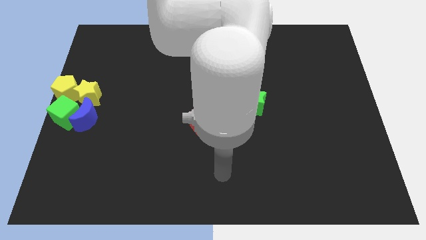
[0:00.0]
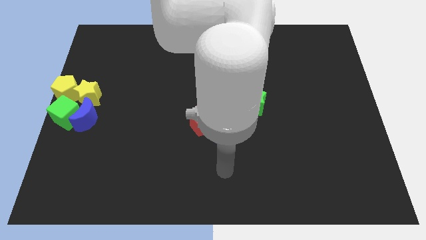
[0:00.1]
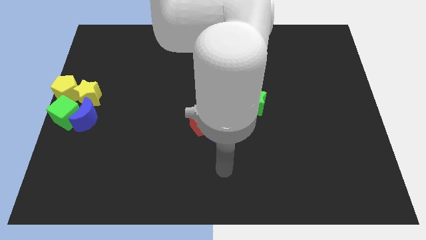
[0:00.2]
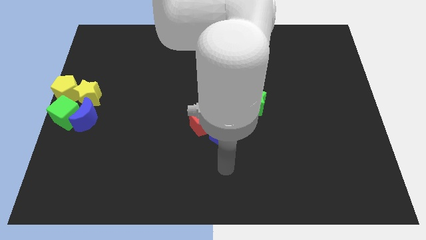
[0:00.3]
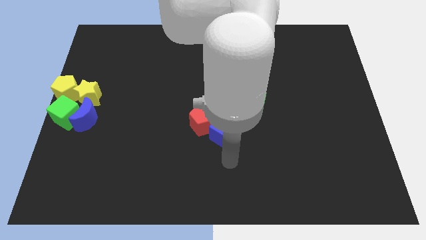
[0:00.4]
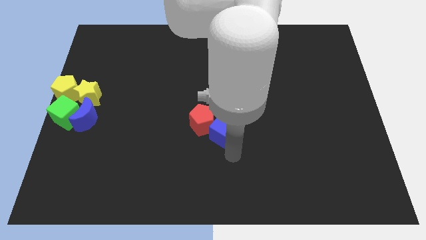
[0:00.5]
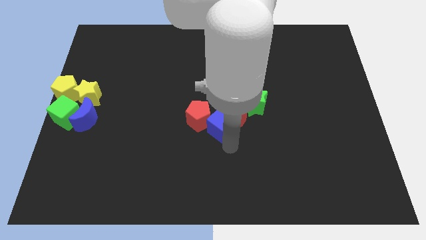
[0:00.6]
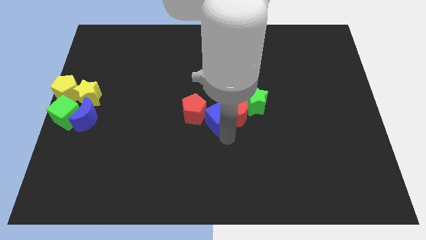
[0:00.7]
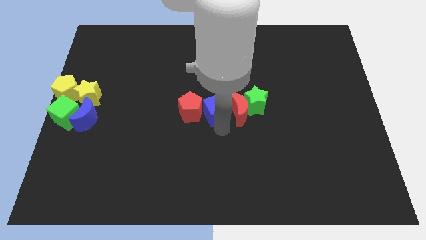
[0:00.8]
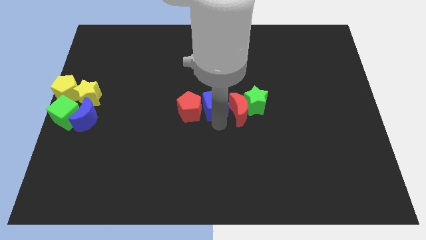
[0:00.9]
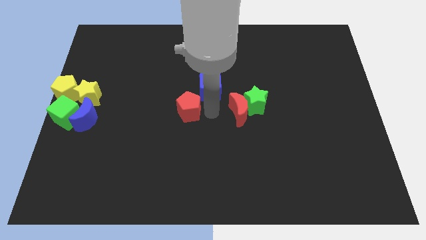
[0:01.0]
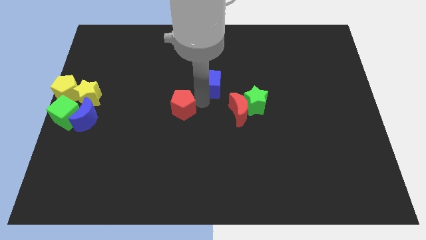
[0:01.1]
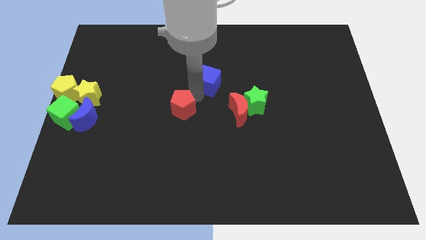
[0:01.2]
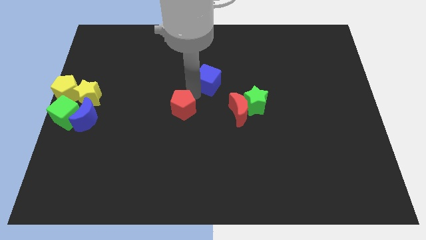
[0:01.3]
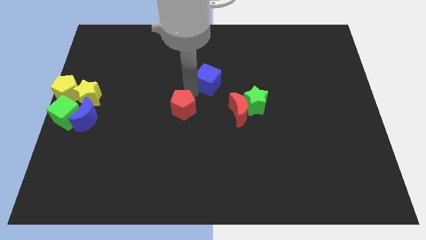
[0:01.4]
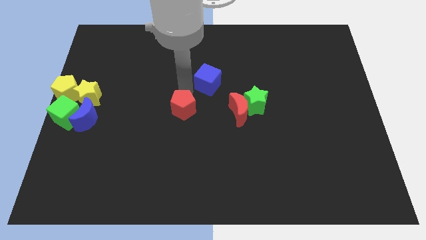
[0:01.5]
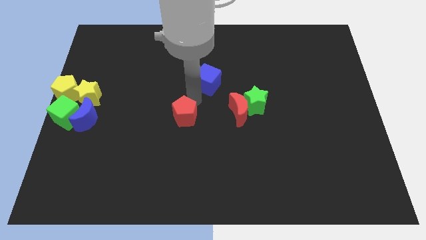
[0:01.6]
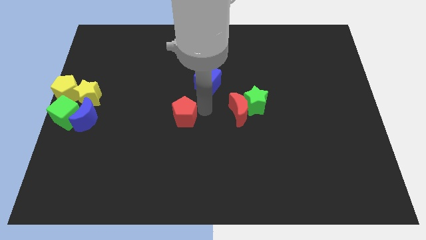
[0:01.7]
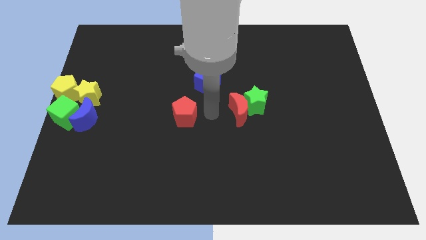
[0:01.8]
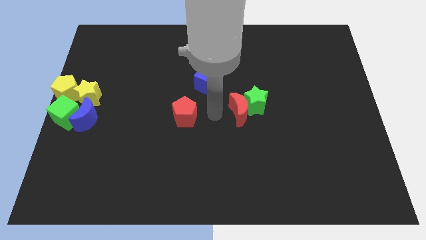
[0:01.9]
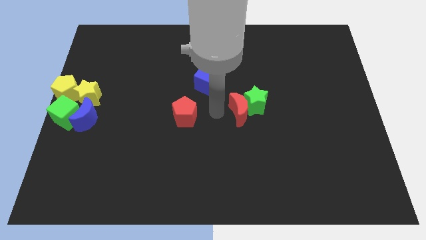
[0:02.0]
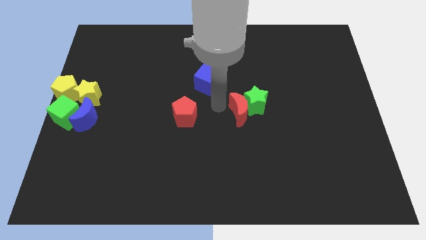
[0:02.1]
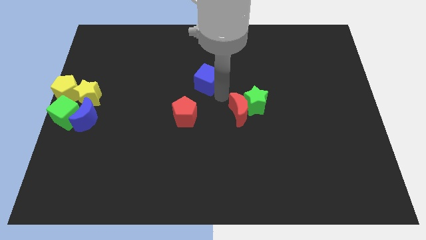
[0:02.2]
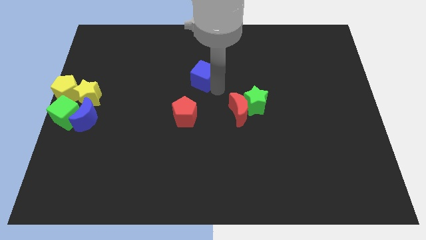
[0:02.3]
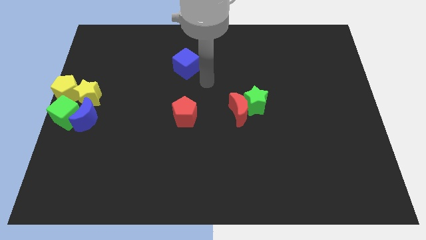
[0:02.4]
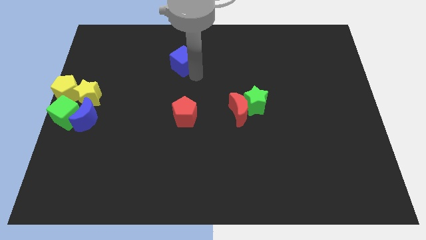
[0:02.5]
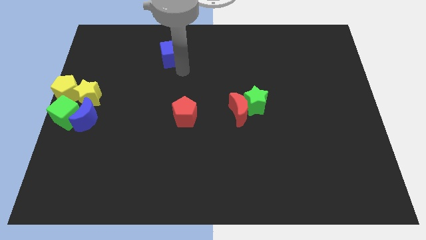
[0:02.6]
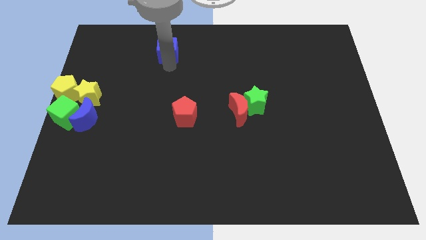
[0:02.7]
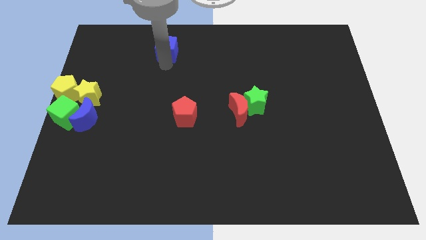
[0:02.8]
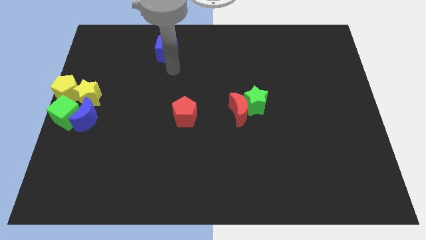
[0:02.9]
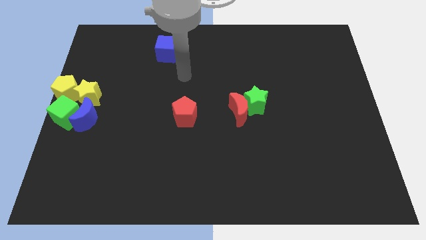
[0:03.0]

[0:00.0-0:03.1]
separate blue cube from the red pentagon

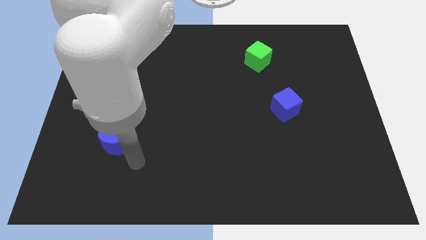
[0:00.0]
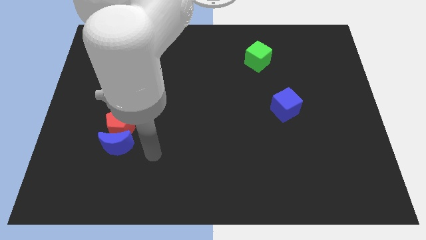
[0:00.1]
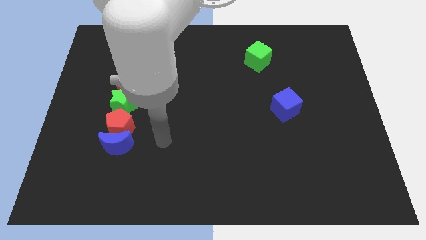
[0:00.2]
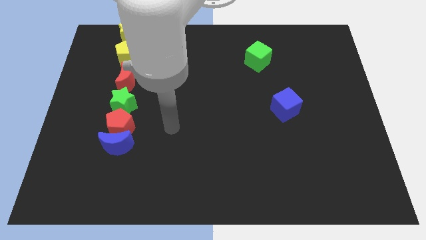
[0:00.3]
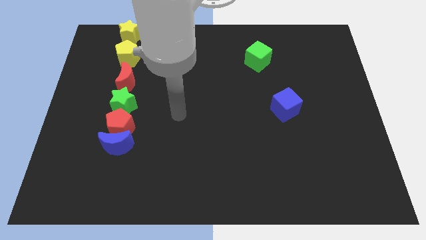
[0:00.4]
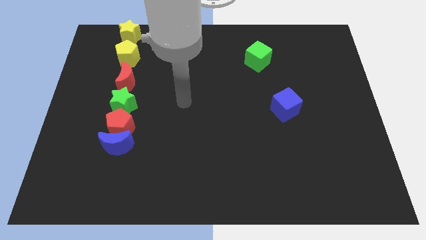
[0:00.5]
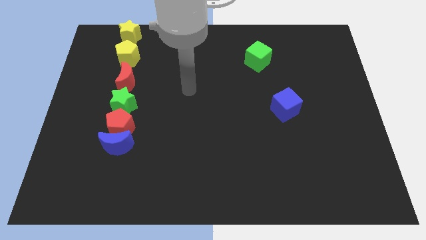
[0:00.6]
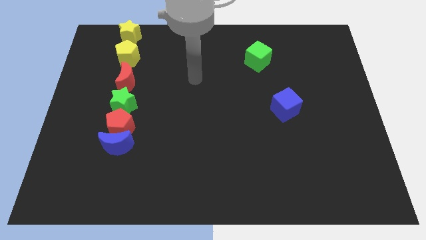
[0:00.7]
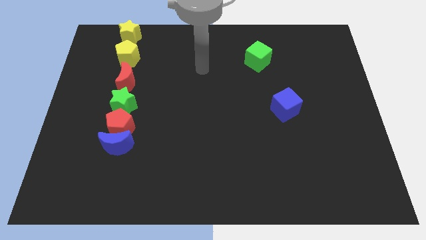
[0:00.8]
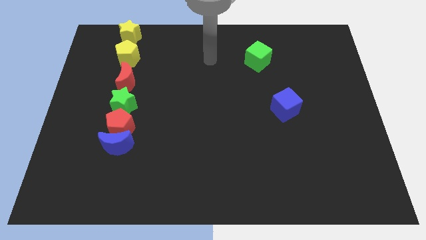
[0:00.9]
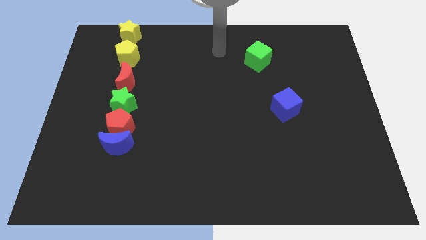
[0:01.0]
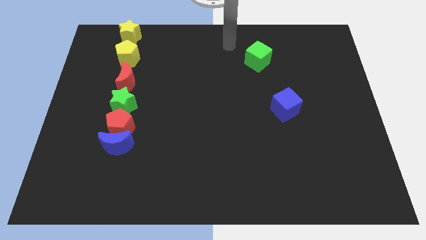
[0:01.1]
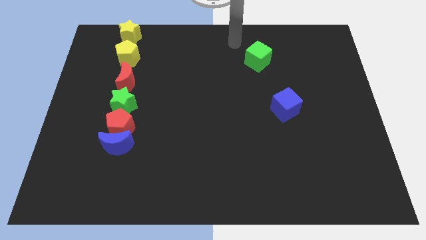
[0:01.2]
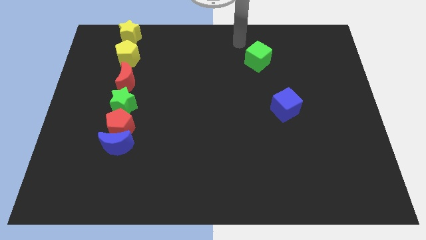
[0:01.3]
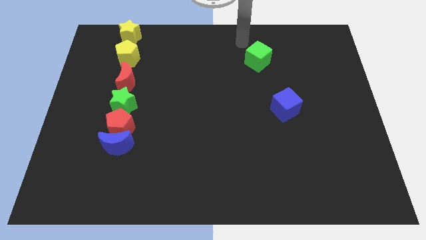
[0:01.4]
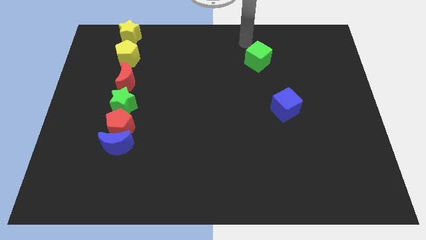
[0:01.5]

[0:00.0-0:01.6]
go away from the blue moon

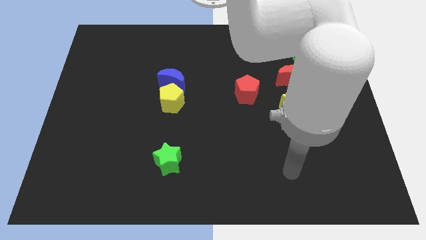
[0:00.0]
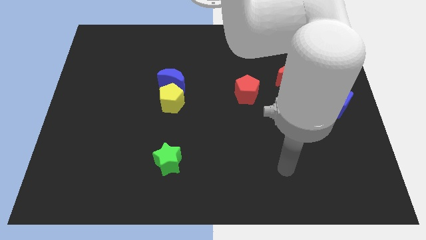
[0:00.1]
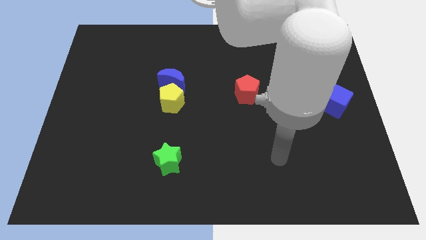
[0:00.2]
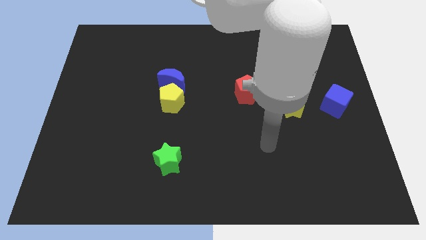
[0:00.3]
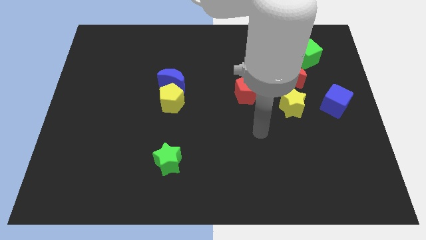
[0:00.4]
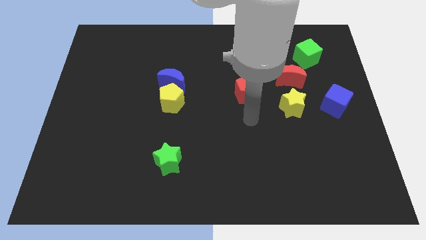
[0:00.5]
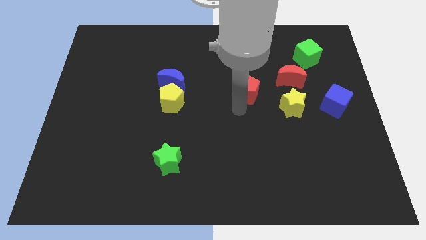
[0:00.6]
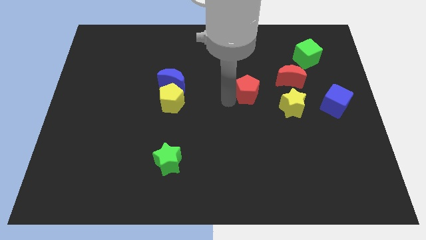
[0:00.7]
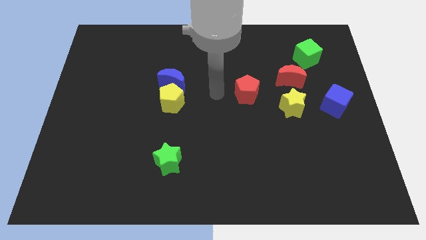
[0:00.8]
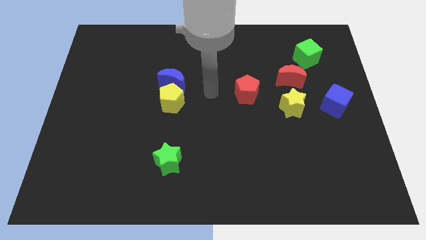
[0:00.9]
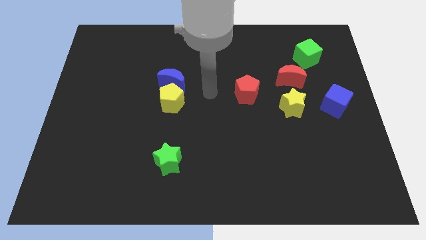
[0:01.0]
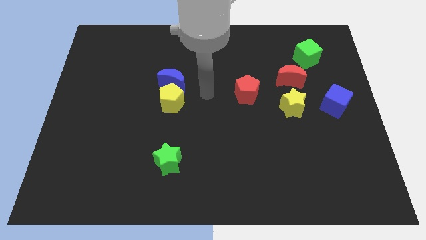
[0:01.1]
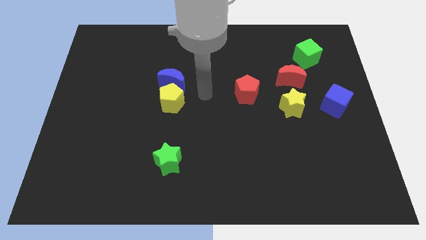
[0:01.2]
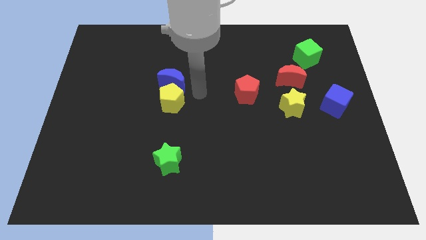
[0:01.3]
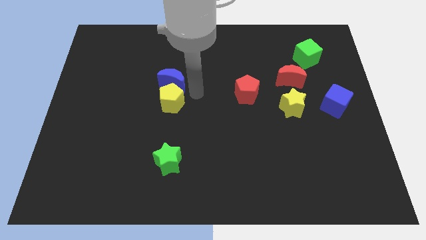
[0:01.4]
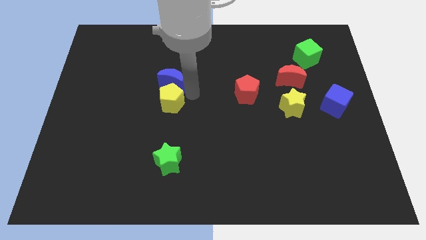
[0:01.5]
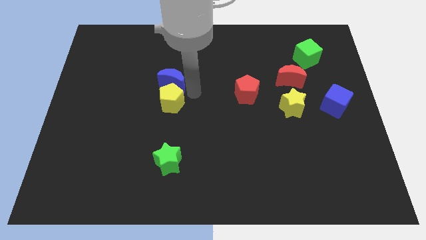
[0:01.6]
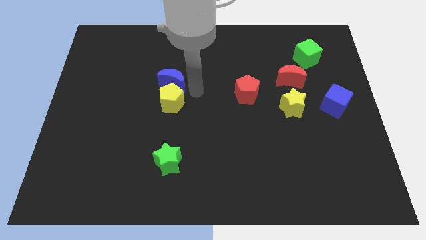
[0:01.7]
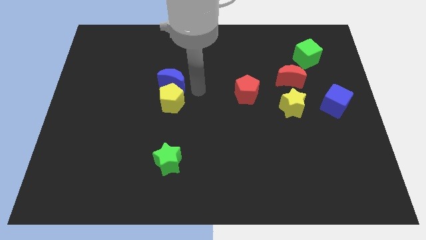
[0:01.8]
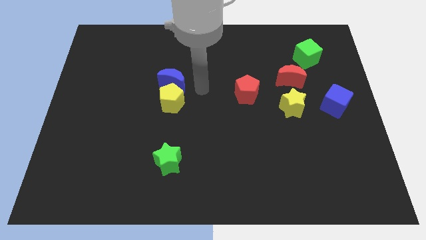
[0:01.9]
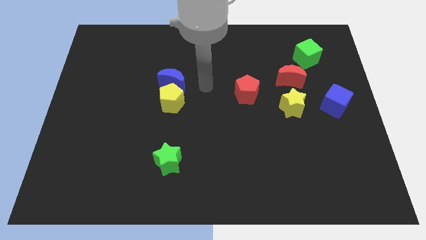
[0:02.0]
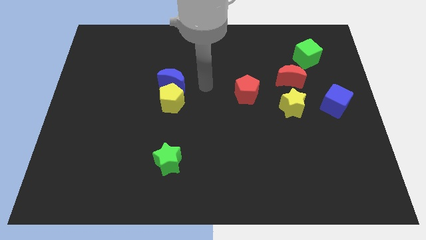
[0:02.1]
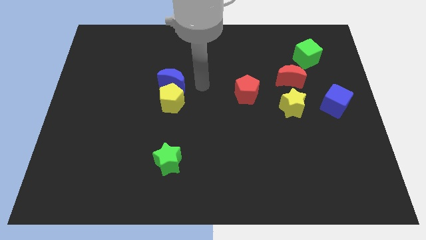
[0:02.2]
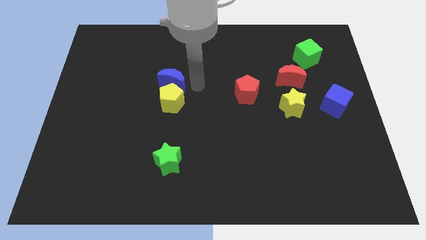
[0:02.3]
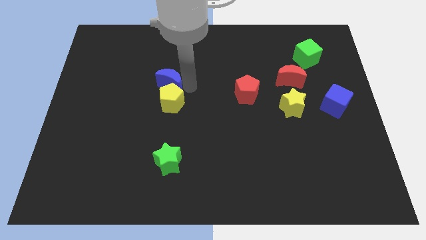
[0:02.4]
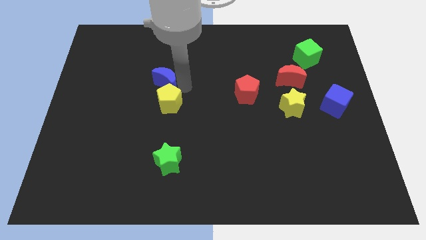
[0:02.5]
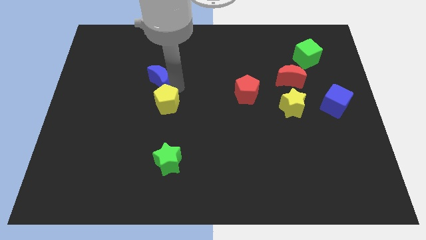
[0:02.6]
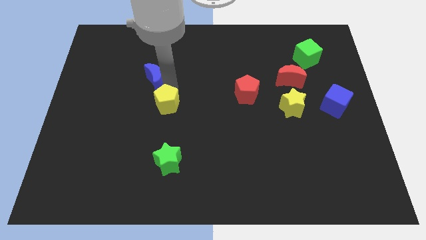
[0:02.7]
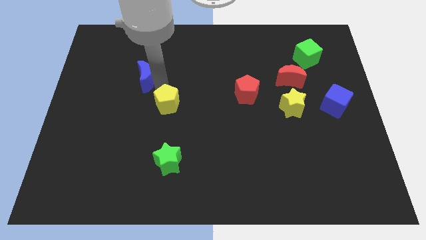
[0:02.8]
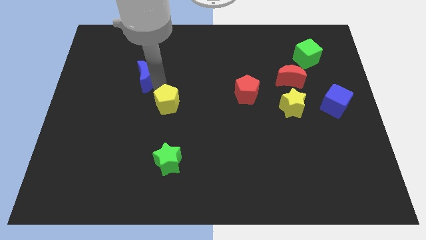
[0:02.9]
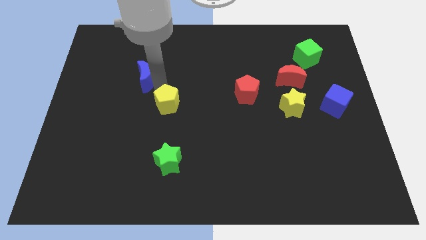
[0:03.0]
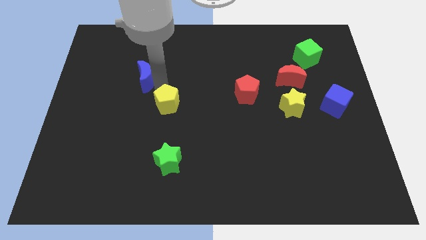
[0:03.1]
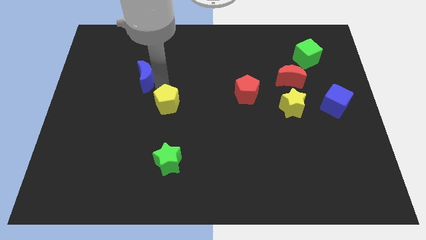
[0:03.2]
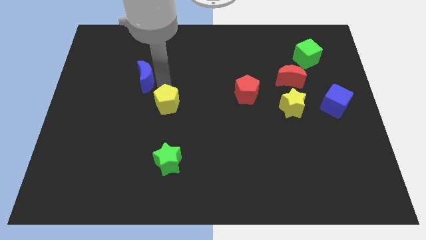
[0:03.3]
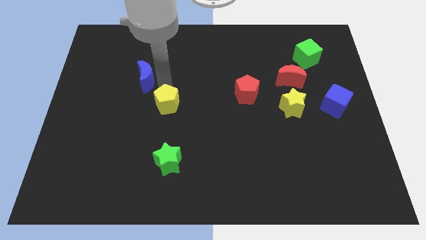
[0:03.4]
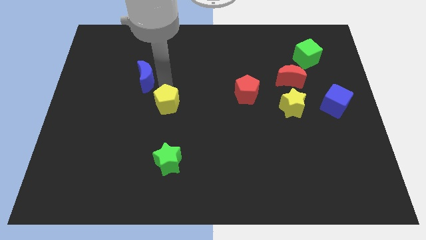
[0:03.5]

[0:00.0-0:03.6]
separate the blue crescent from the yellow pentagon

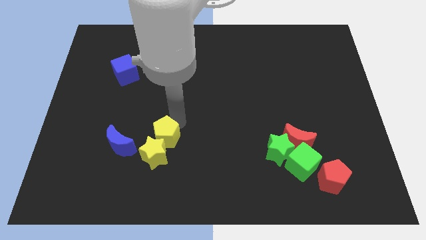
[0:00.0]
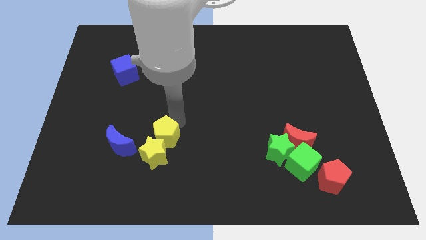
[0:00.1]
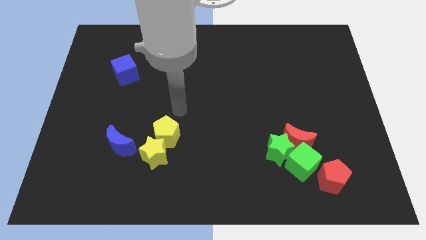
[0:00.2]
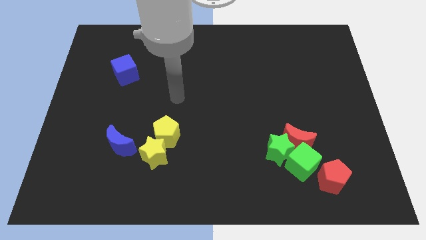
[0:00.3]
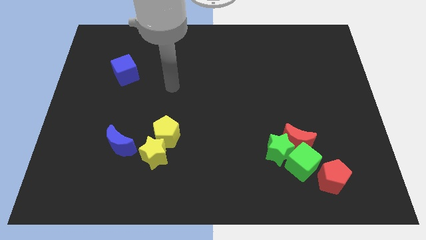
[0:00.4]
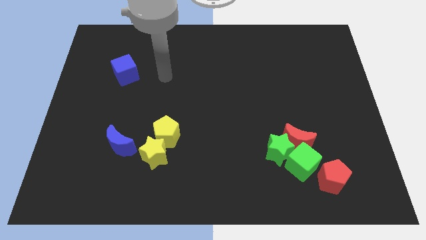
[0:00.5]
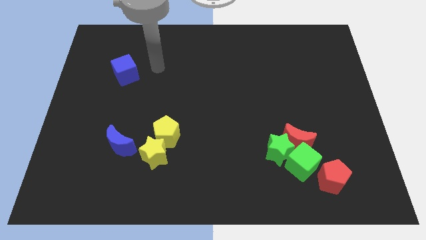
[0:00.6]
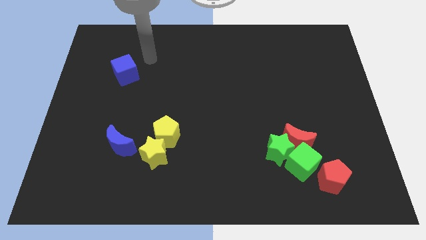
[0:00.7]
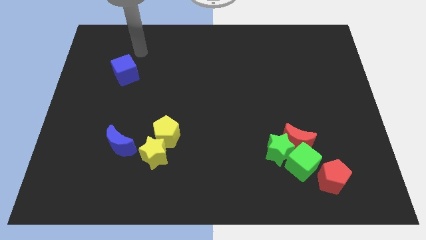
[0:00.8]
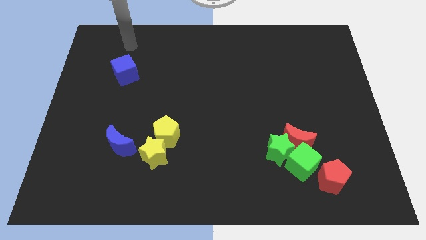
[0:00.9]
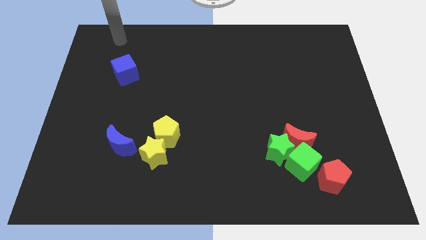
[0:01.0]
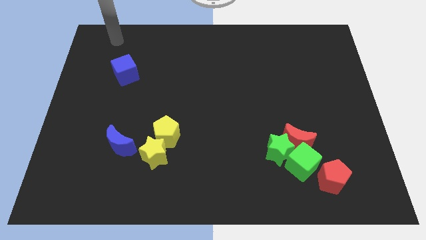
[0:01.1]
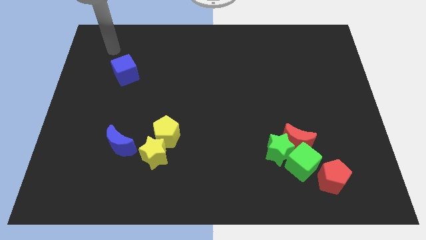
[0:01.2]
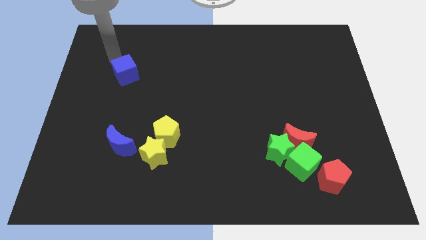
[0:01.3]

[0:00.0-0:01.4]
move your arm to the top side of the blue cube
